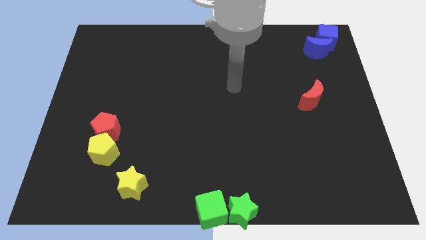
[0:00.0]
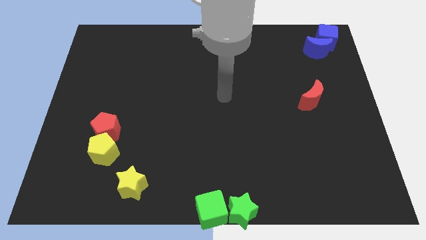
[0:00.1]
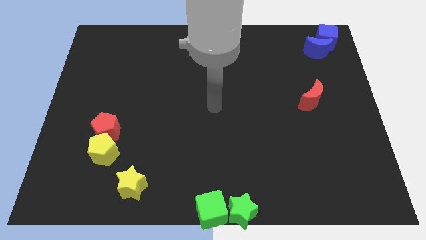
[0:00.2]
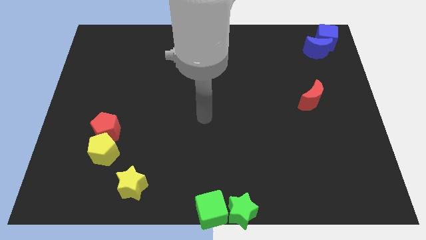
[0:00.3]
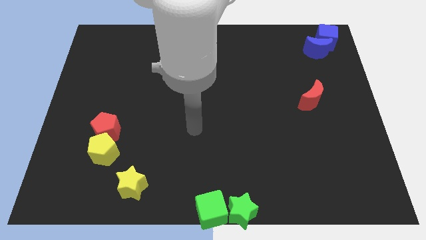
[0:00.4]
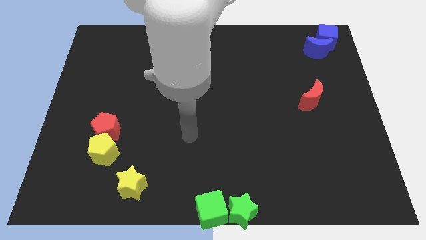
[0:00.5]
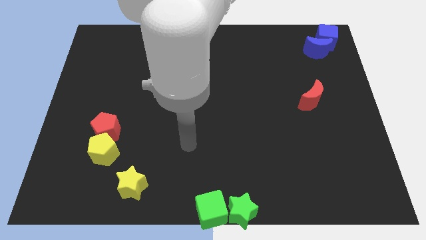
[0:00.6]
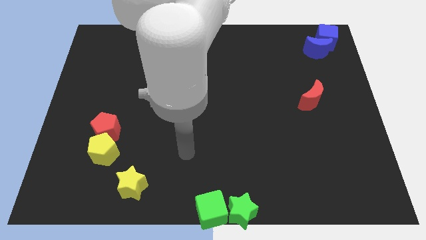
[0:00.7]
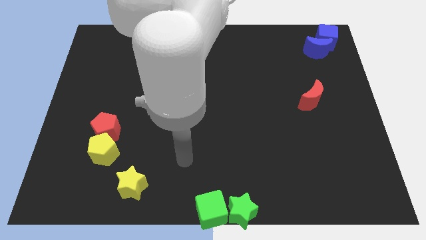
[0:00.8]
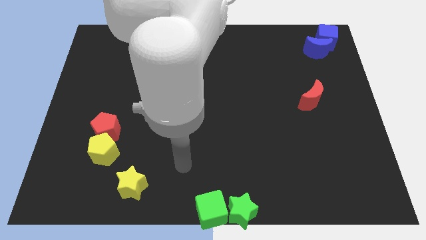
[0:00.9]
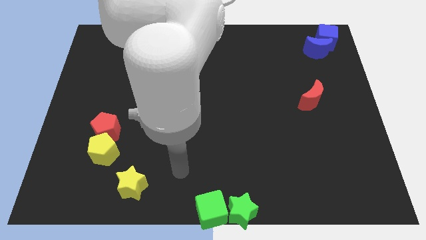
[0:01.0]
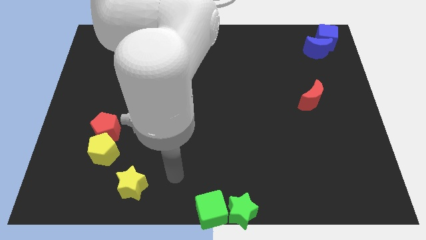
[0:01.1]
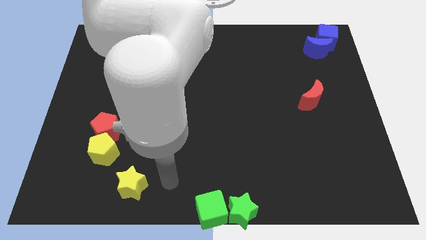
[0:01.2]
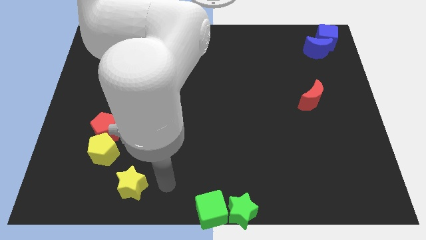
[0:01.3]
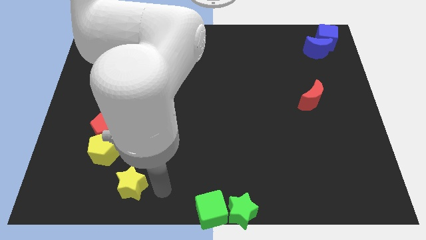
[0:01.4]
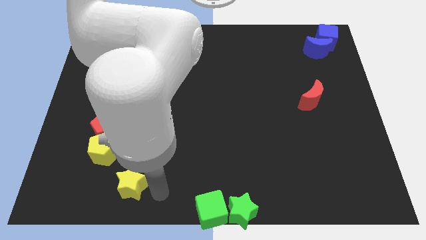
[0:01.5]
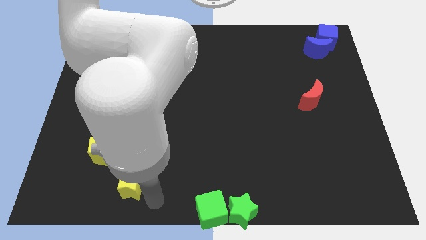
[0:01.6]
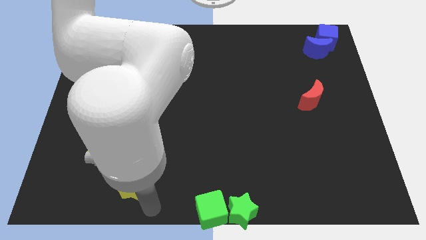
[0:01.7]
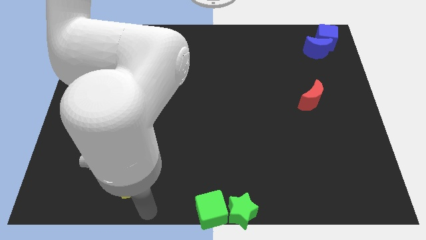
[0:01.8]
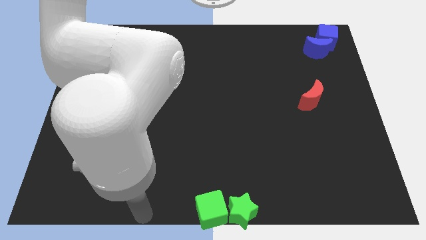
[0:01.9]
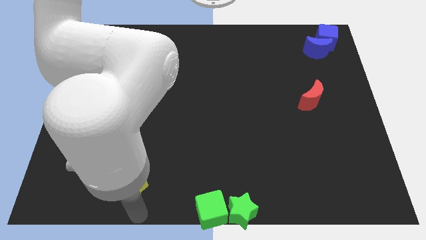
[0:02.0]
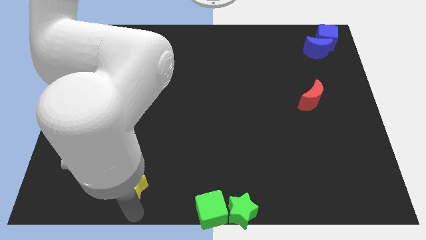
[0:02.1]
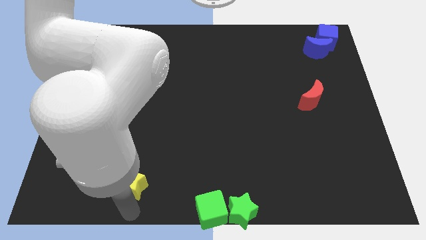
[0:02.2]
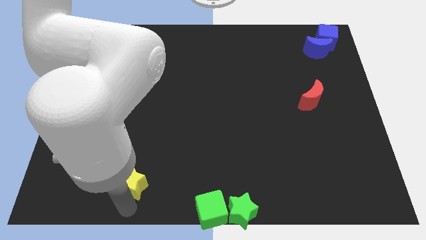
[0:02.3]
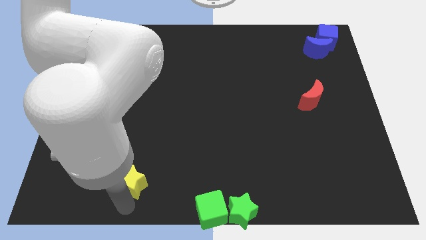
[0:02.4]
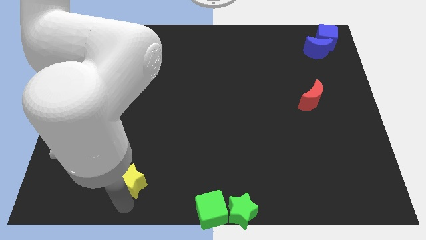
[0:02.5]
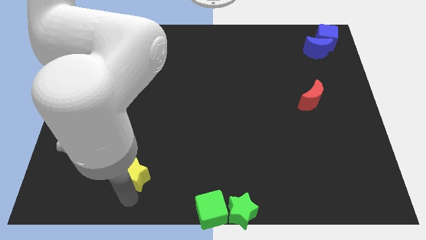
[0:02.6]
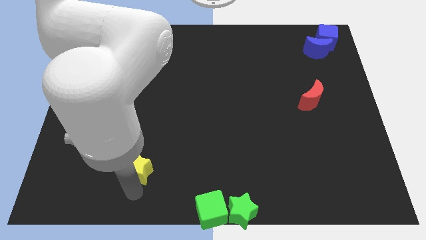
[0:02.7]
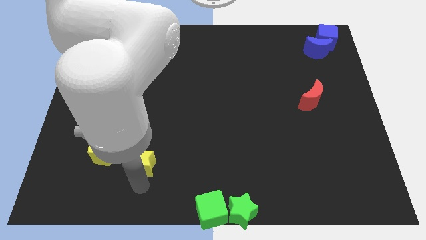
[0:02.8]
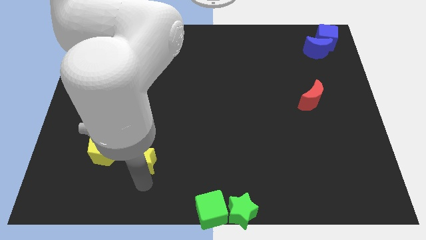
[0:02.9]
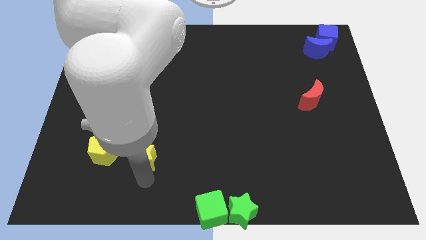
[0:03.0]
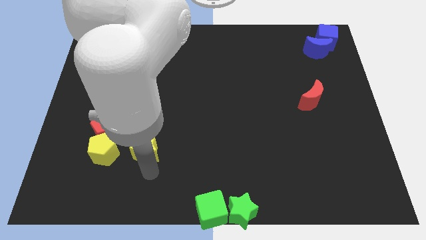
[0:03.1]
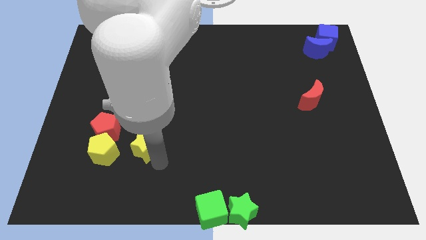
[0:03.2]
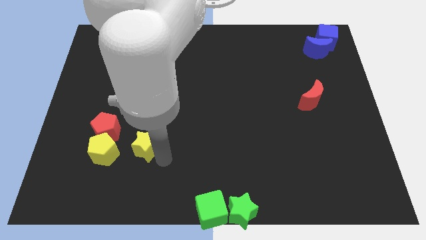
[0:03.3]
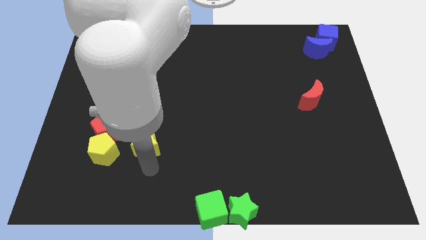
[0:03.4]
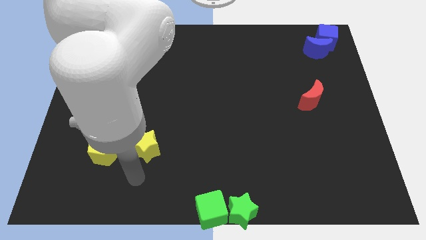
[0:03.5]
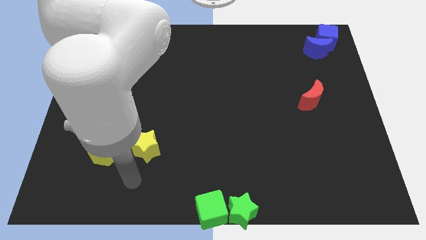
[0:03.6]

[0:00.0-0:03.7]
place a yellow star beside the yellow pentagon

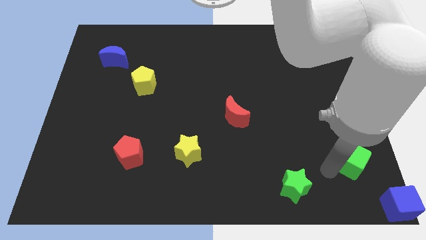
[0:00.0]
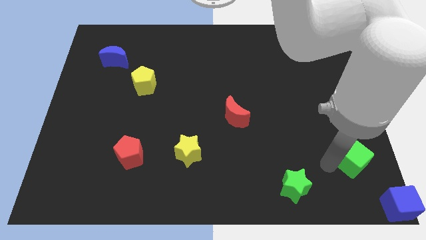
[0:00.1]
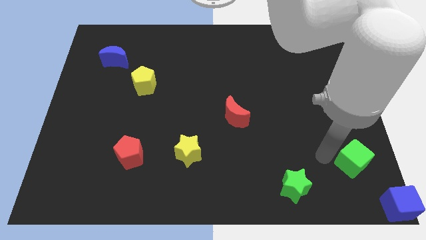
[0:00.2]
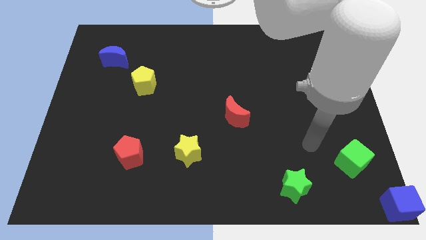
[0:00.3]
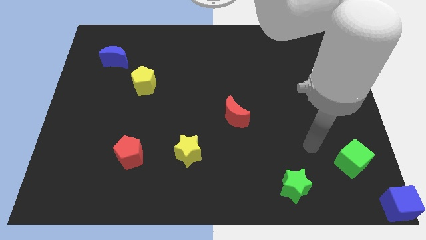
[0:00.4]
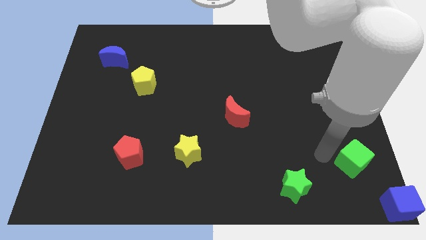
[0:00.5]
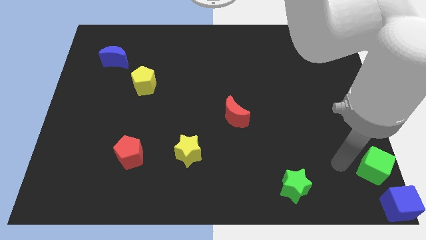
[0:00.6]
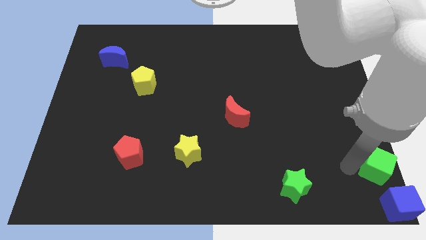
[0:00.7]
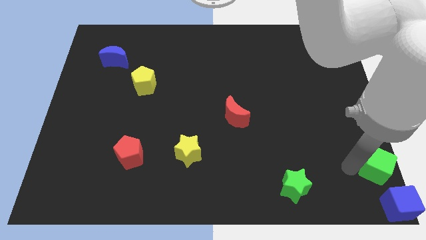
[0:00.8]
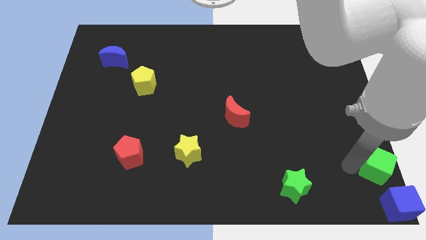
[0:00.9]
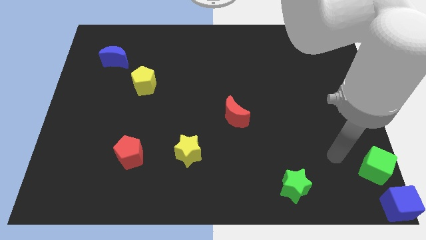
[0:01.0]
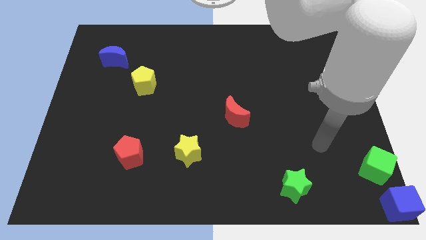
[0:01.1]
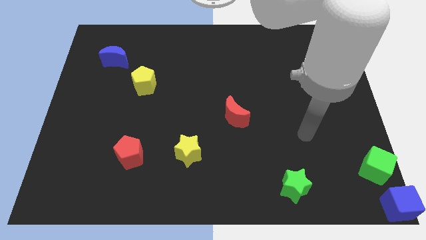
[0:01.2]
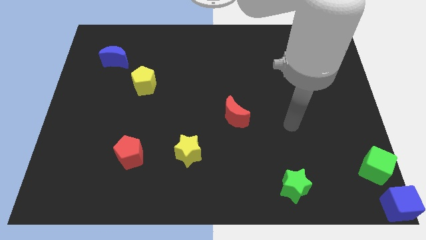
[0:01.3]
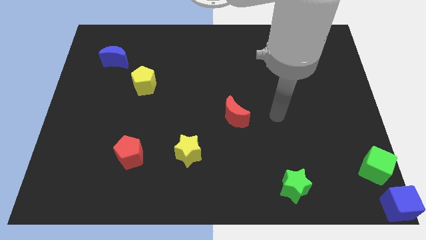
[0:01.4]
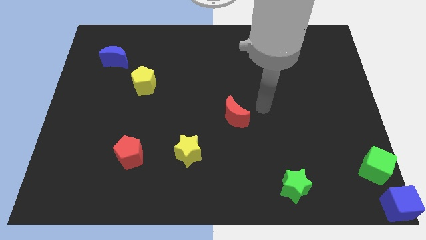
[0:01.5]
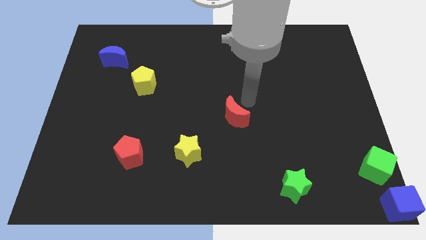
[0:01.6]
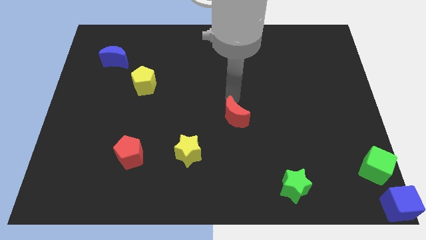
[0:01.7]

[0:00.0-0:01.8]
move the green cube at the bottom right corner

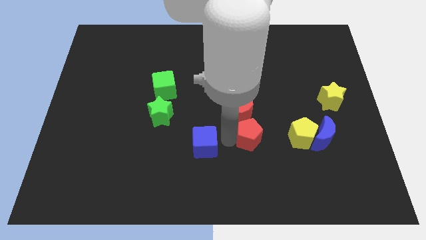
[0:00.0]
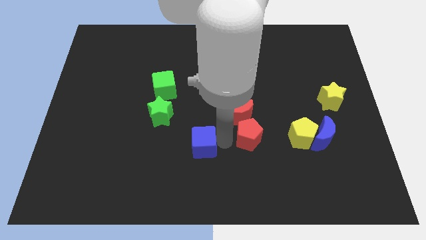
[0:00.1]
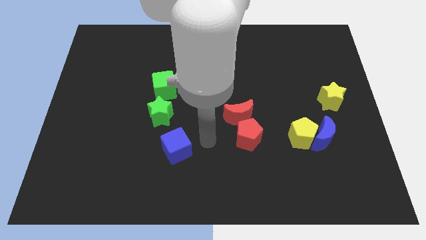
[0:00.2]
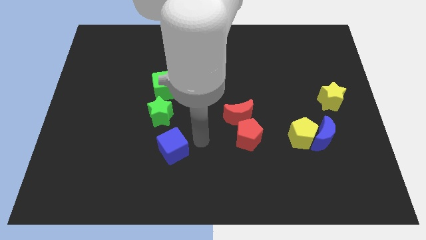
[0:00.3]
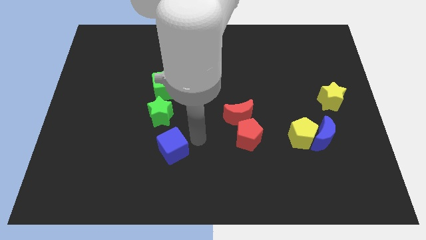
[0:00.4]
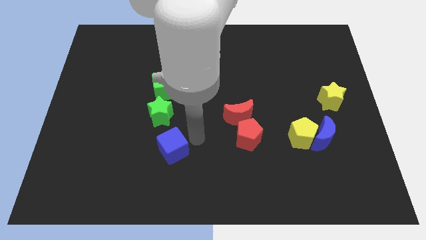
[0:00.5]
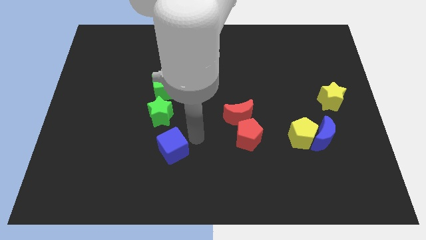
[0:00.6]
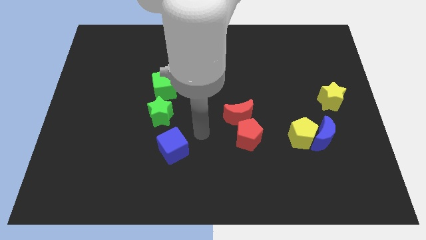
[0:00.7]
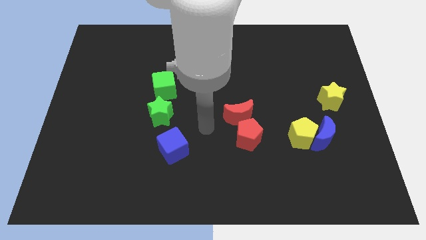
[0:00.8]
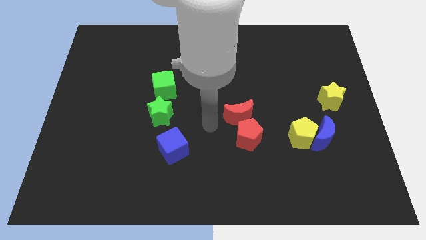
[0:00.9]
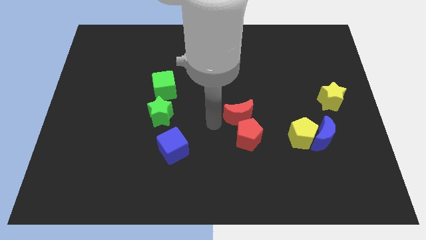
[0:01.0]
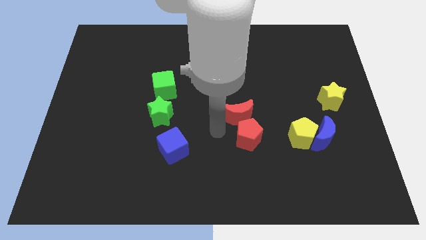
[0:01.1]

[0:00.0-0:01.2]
push the blue cube to the bottom of the green star

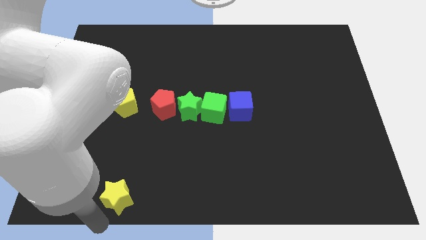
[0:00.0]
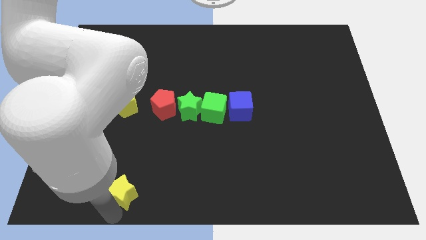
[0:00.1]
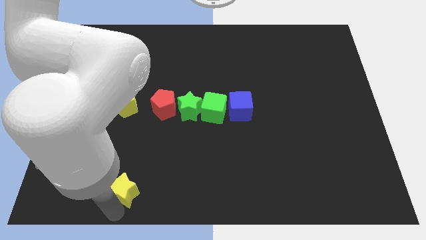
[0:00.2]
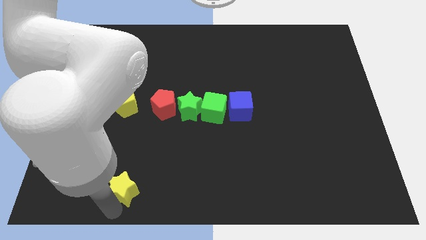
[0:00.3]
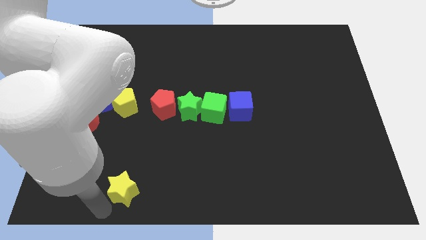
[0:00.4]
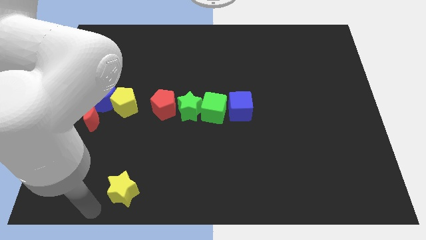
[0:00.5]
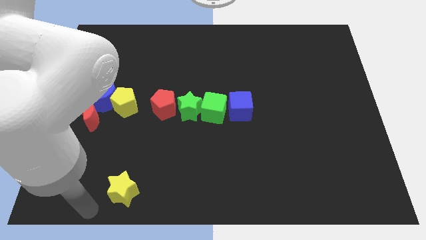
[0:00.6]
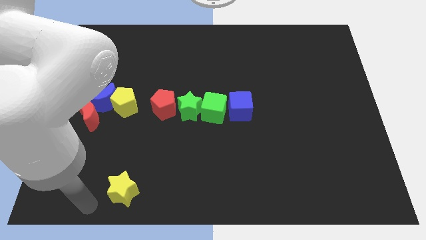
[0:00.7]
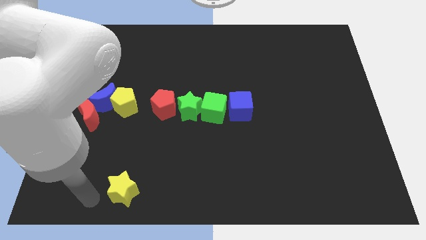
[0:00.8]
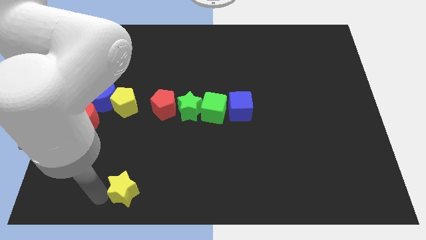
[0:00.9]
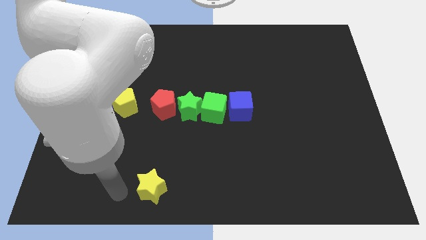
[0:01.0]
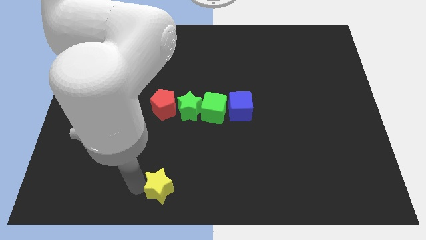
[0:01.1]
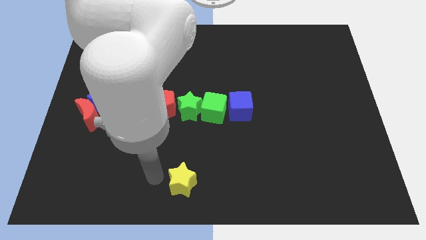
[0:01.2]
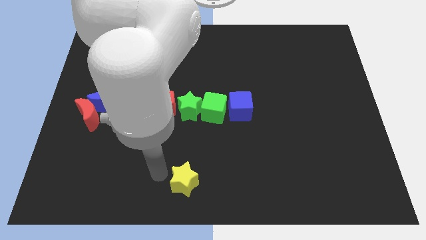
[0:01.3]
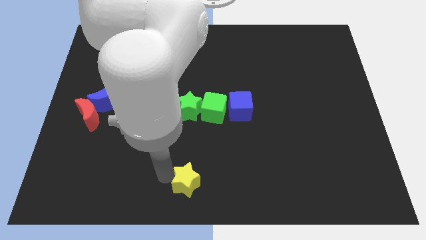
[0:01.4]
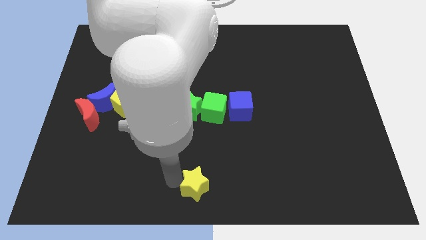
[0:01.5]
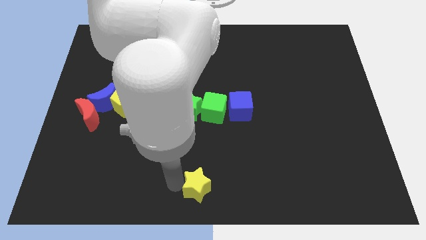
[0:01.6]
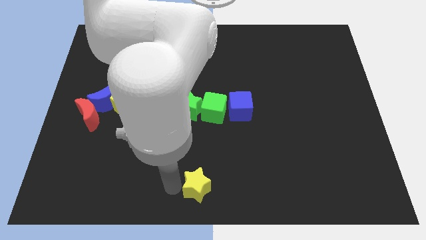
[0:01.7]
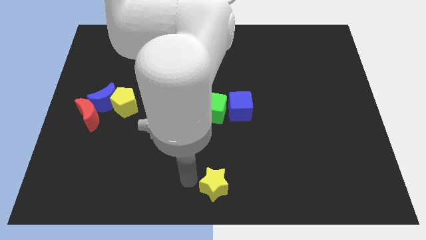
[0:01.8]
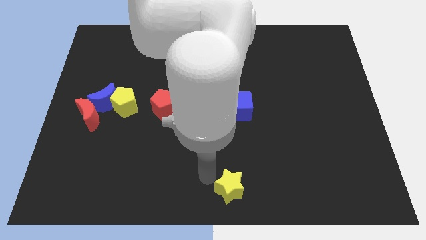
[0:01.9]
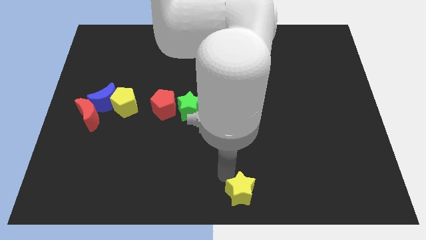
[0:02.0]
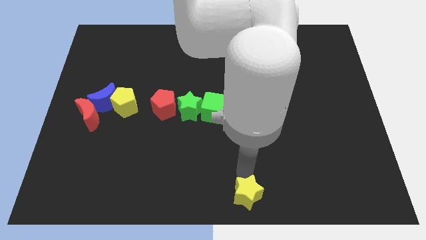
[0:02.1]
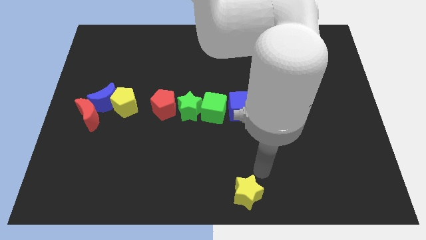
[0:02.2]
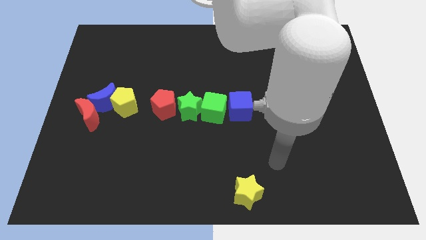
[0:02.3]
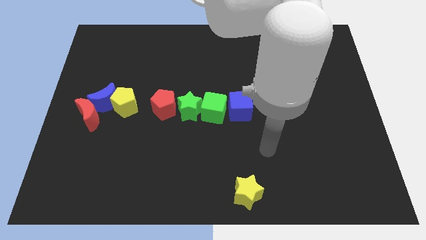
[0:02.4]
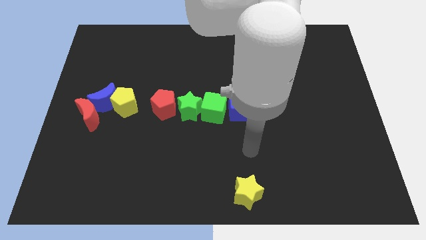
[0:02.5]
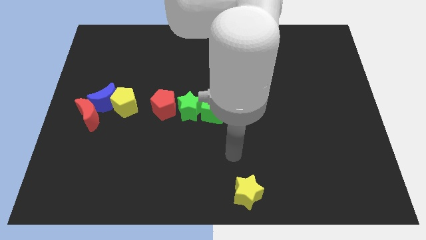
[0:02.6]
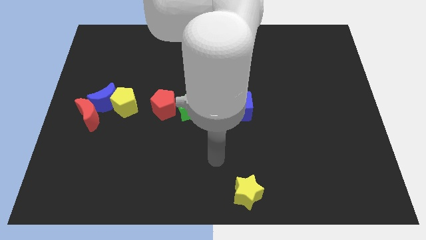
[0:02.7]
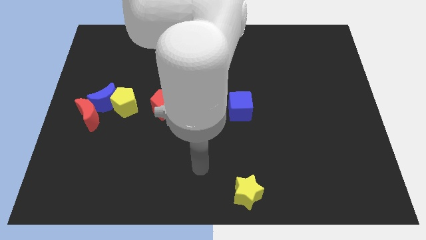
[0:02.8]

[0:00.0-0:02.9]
place the yellow star towards the bottom center of the board
